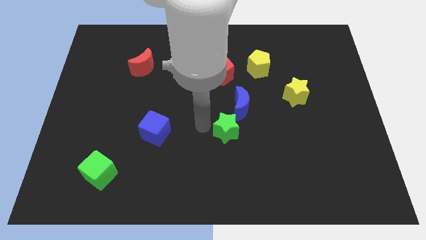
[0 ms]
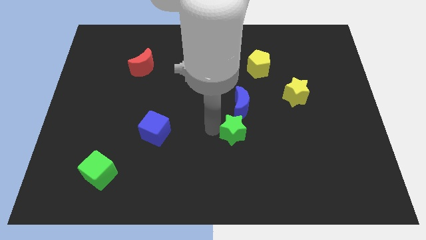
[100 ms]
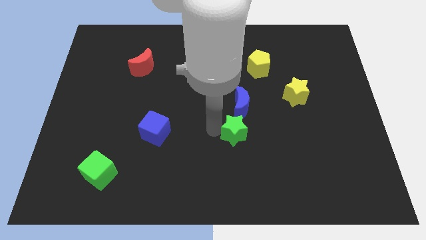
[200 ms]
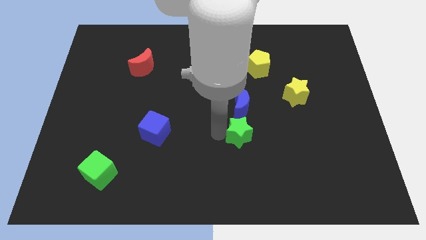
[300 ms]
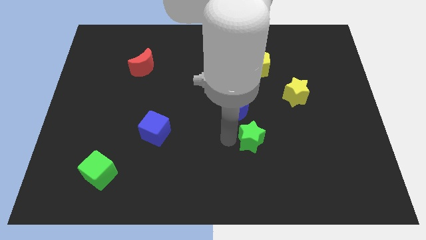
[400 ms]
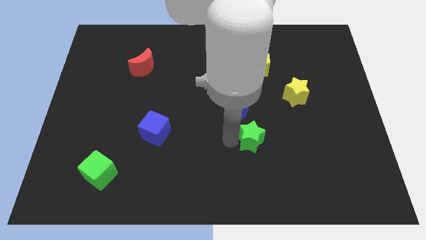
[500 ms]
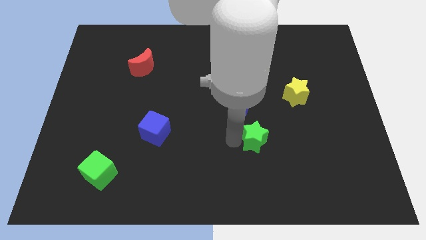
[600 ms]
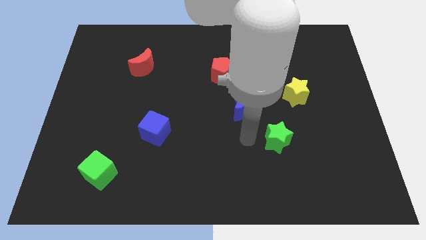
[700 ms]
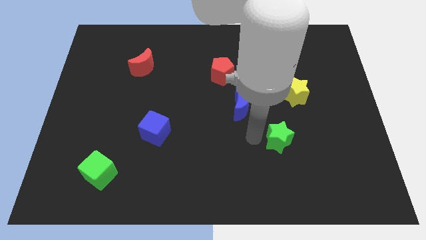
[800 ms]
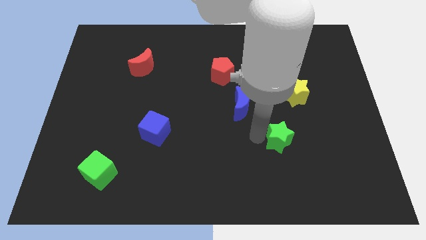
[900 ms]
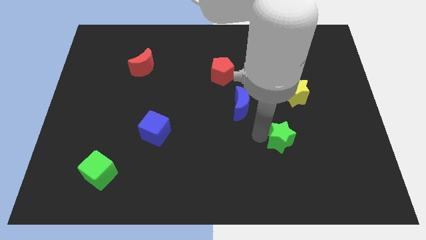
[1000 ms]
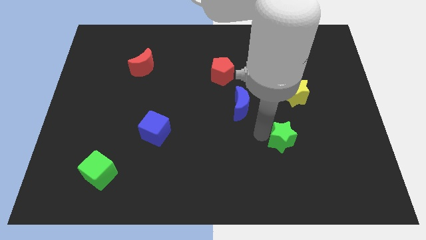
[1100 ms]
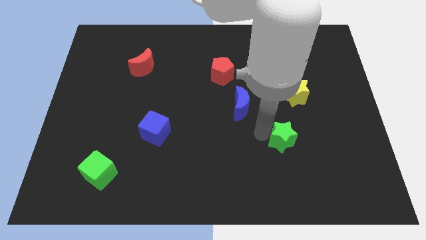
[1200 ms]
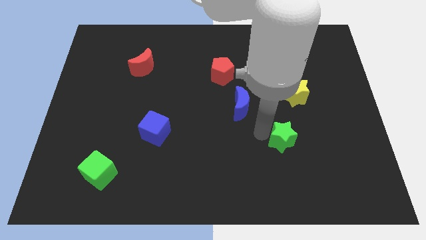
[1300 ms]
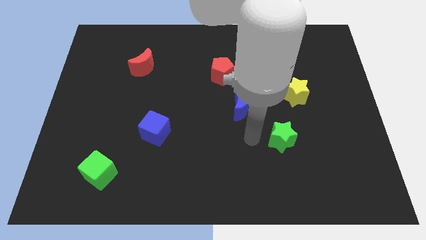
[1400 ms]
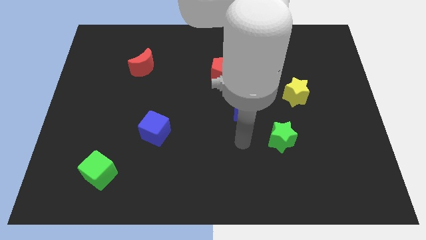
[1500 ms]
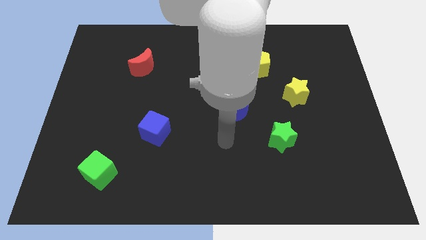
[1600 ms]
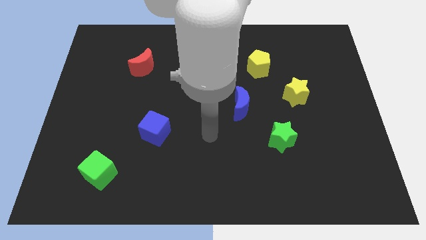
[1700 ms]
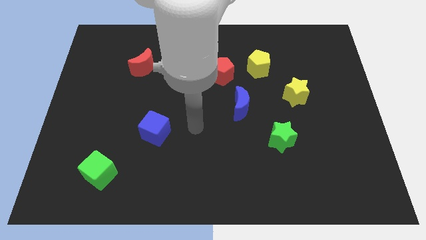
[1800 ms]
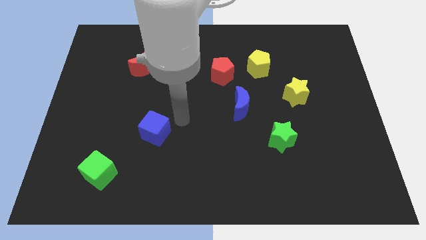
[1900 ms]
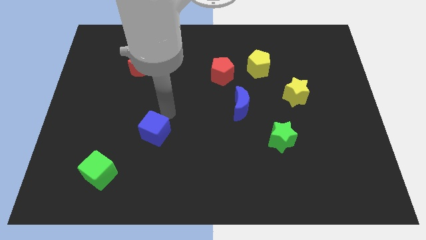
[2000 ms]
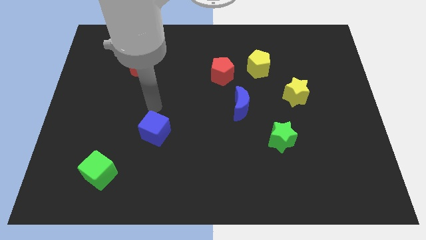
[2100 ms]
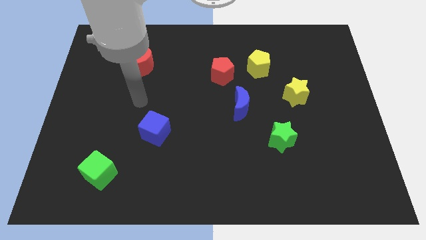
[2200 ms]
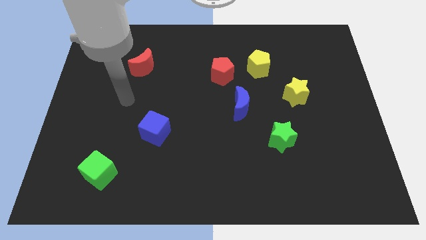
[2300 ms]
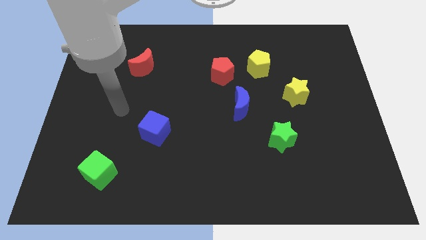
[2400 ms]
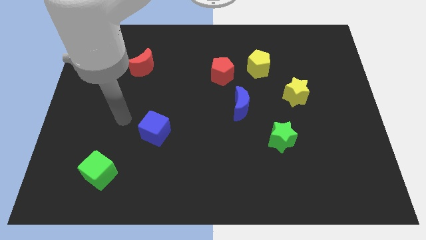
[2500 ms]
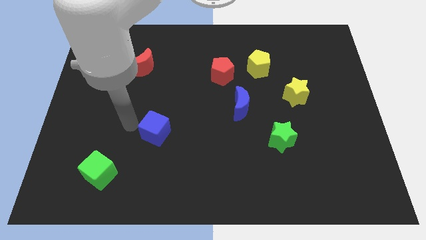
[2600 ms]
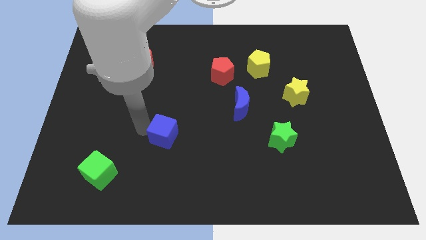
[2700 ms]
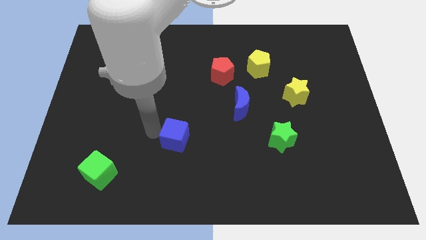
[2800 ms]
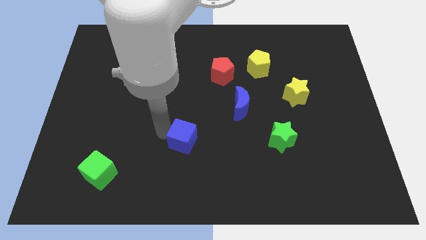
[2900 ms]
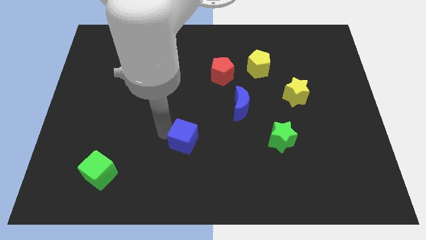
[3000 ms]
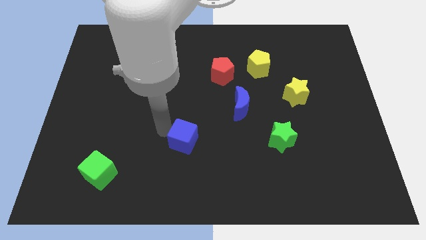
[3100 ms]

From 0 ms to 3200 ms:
place the blue cube and green star parallel to each other

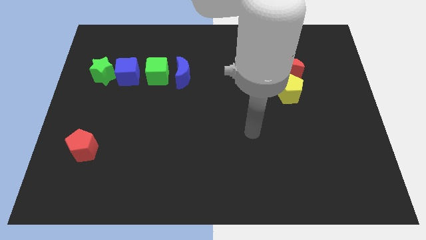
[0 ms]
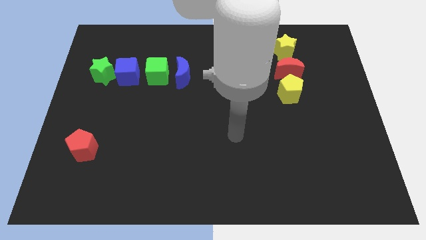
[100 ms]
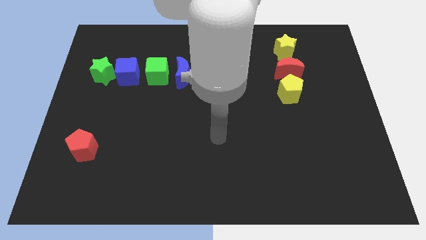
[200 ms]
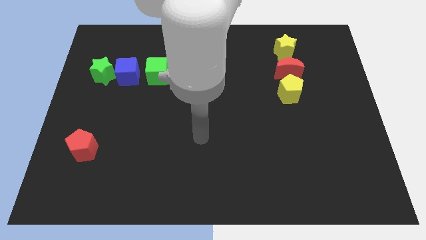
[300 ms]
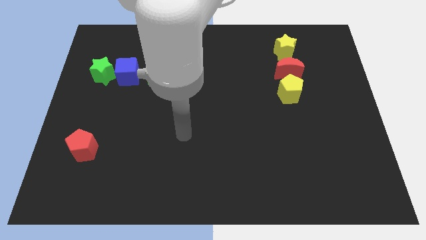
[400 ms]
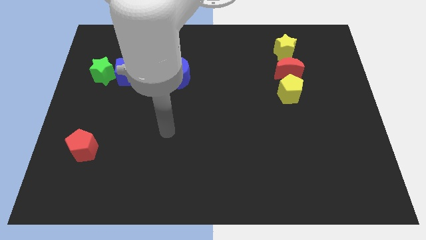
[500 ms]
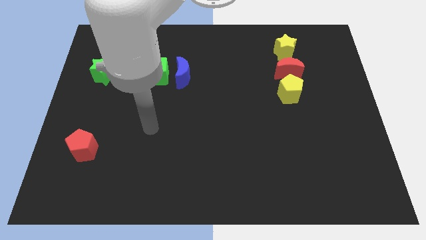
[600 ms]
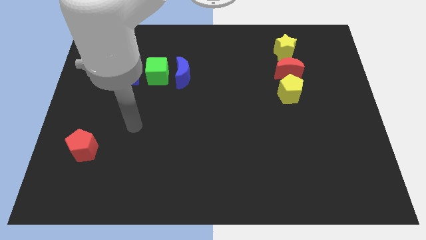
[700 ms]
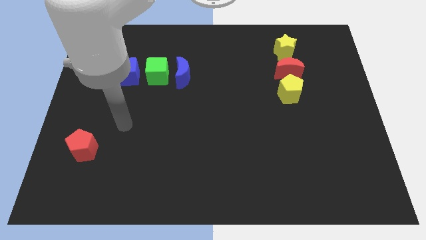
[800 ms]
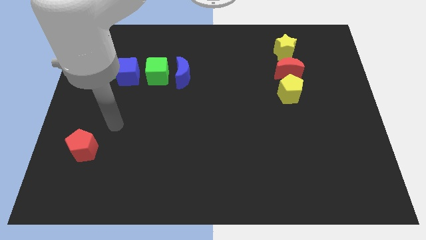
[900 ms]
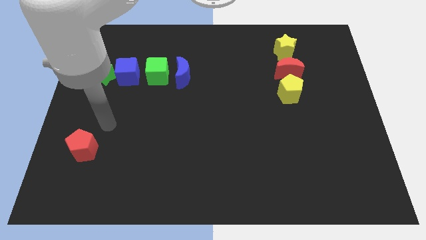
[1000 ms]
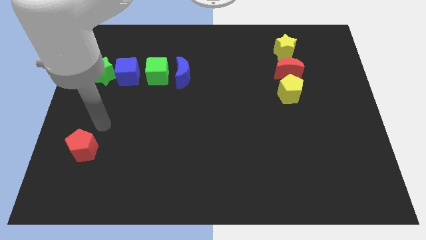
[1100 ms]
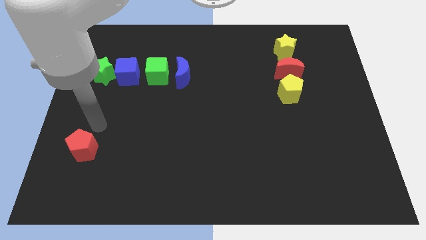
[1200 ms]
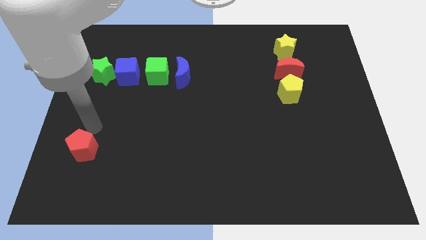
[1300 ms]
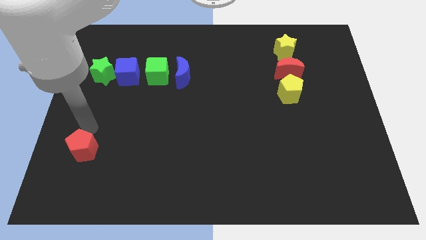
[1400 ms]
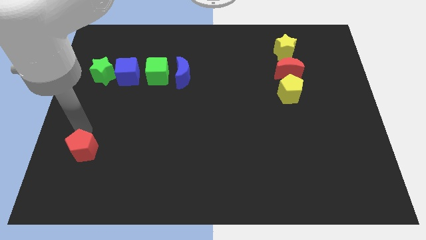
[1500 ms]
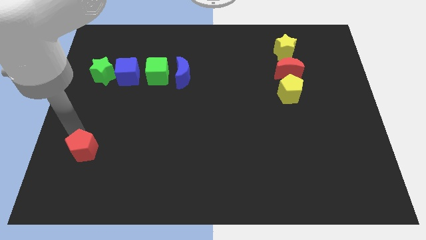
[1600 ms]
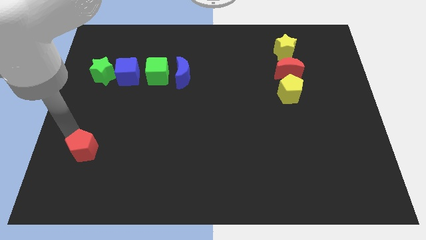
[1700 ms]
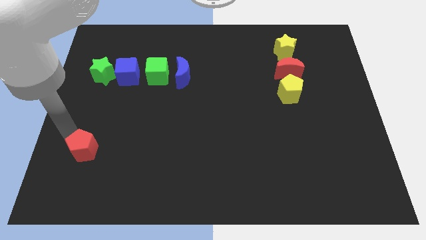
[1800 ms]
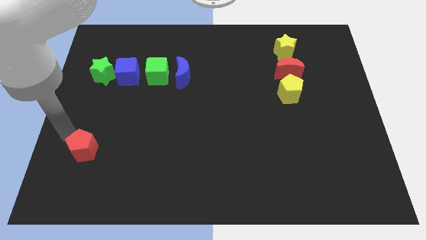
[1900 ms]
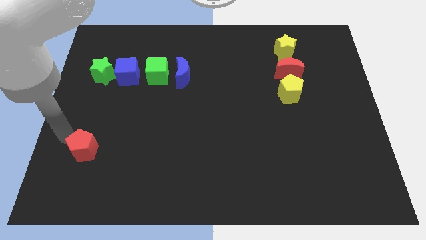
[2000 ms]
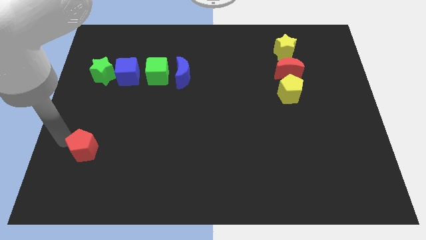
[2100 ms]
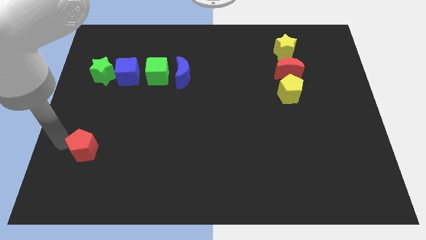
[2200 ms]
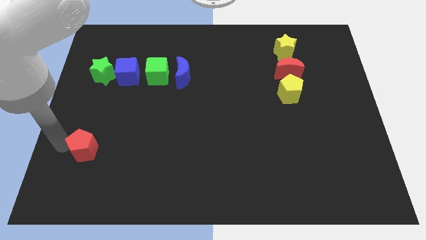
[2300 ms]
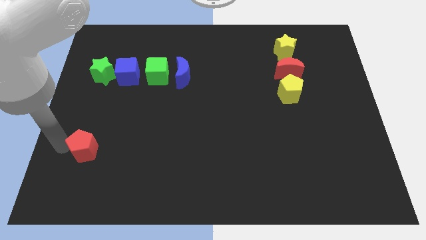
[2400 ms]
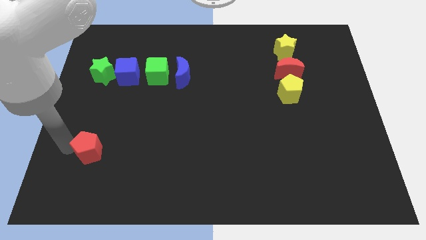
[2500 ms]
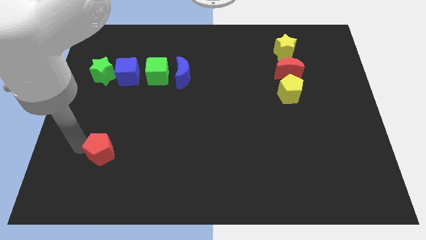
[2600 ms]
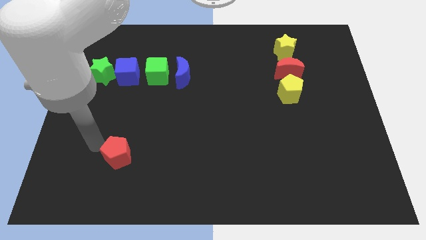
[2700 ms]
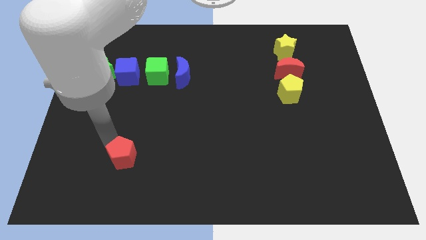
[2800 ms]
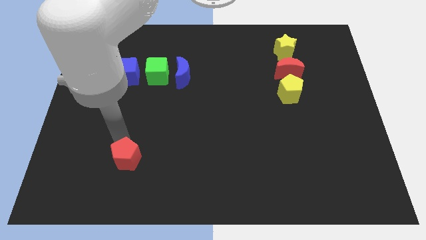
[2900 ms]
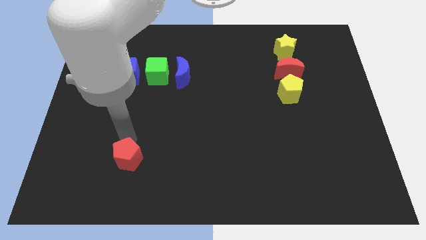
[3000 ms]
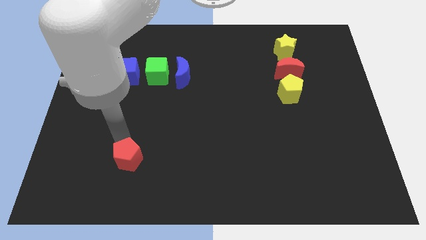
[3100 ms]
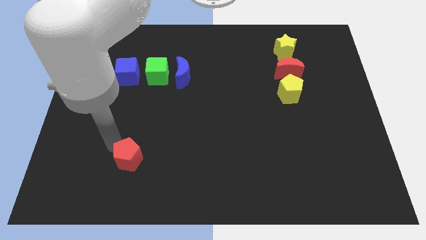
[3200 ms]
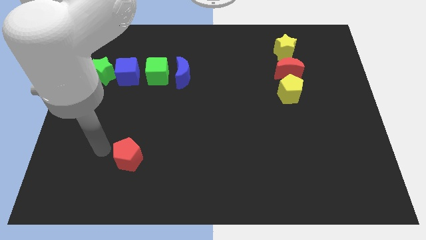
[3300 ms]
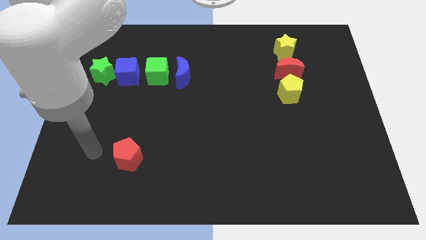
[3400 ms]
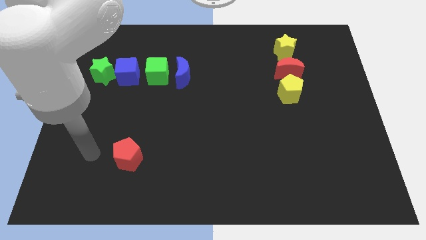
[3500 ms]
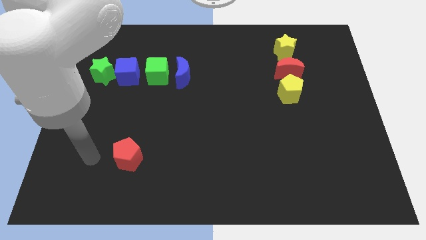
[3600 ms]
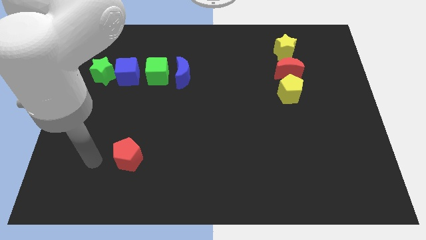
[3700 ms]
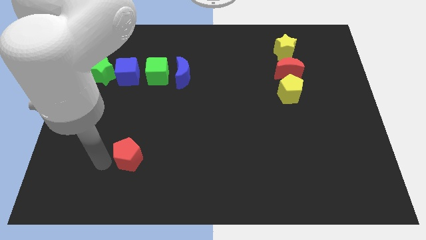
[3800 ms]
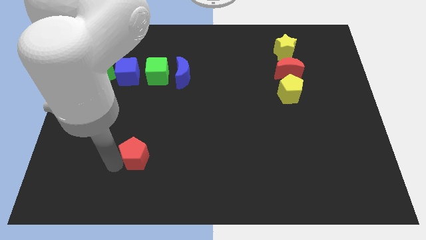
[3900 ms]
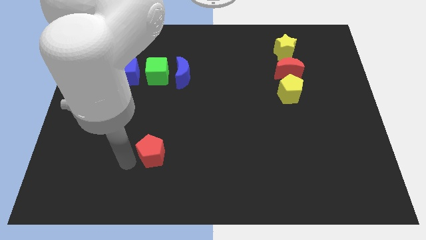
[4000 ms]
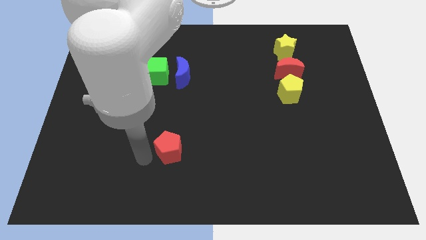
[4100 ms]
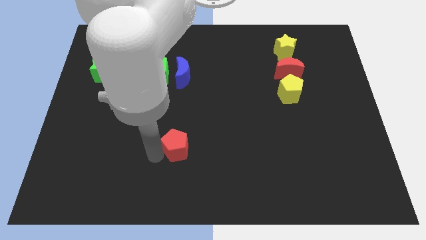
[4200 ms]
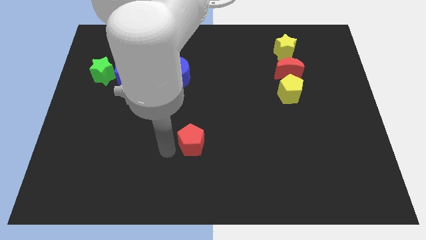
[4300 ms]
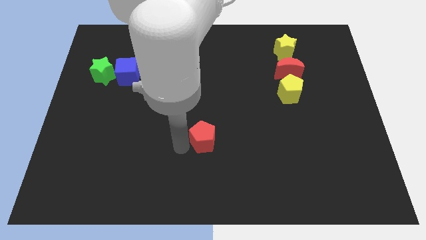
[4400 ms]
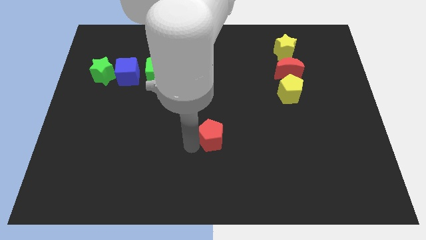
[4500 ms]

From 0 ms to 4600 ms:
place the red pentagon at the center of the board

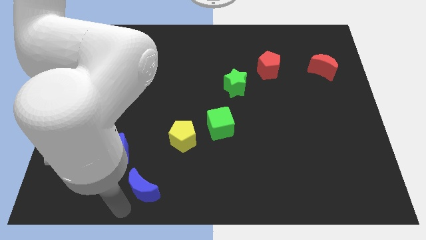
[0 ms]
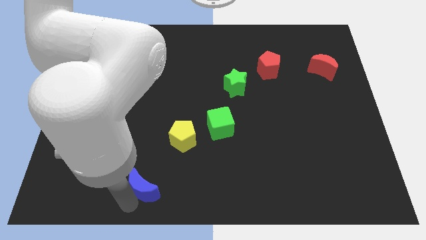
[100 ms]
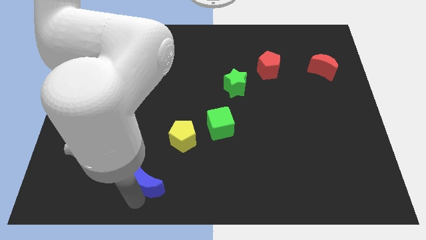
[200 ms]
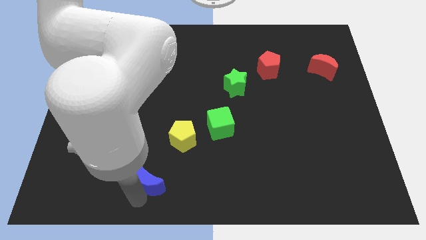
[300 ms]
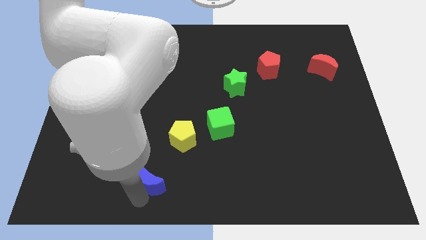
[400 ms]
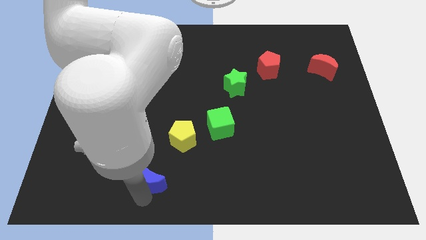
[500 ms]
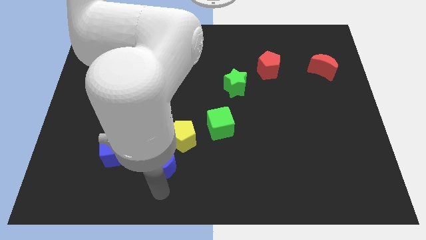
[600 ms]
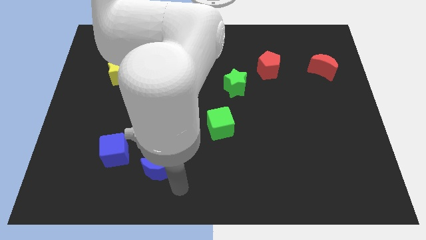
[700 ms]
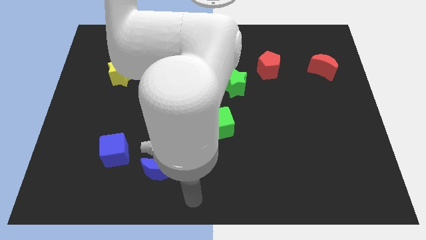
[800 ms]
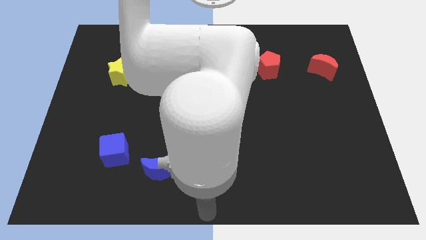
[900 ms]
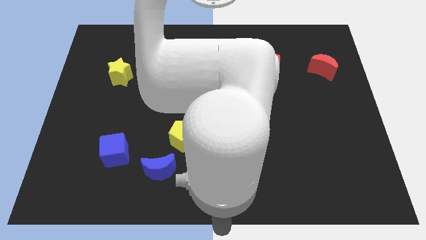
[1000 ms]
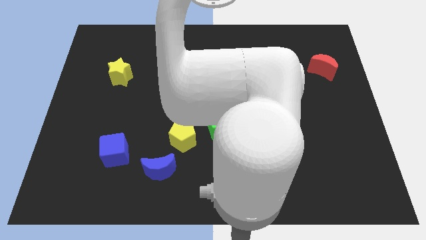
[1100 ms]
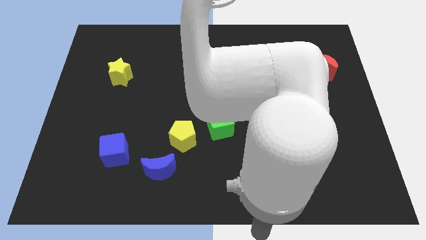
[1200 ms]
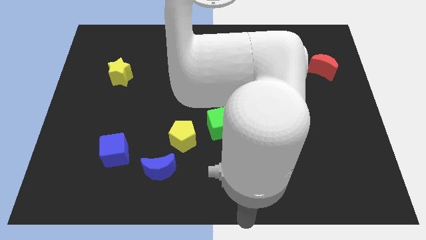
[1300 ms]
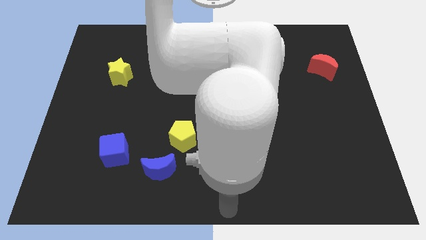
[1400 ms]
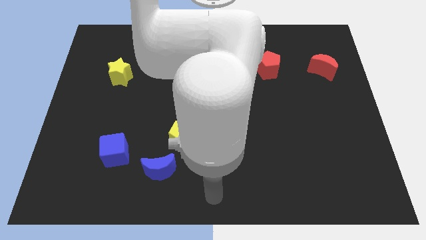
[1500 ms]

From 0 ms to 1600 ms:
move the blue crescent slightly towards the right side of the blue cube
